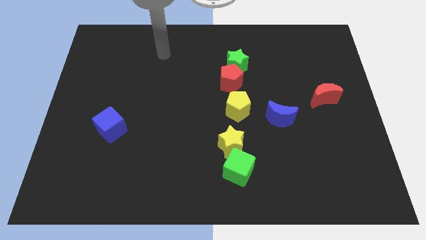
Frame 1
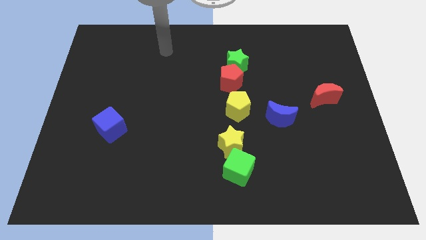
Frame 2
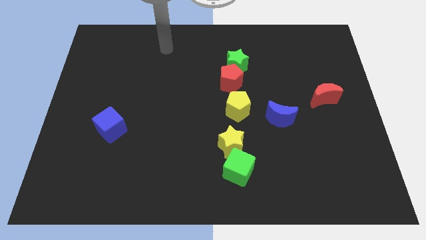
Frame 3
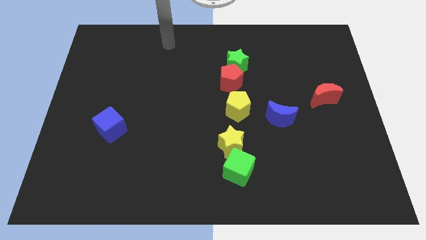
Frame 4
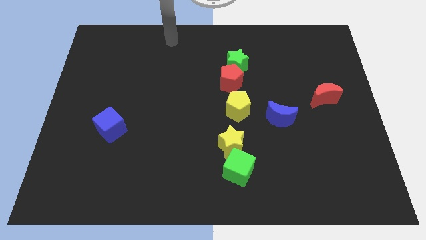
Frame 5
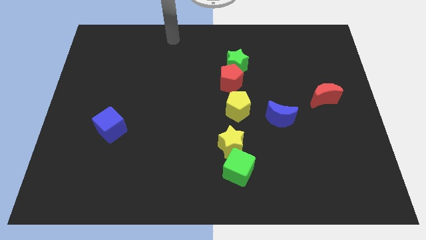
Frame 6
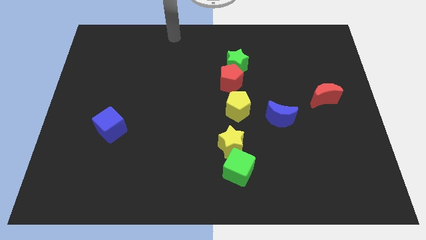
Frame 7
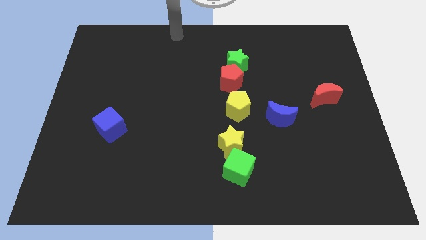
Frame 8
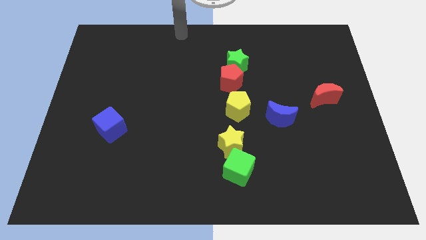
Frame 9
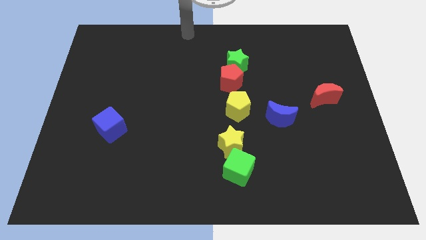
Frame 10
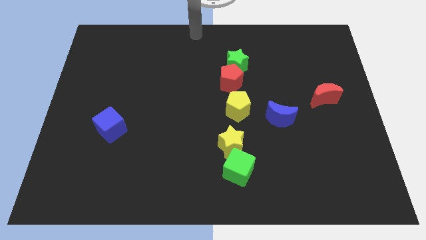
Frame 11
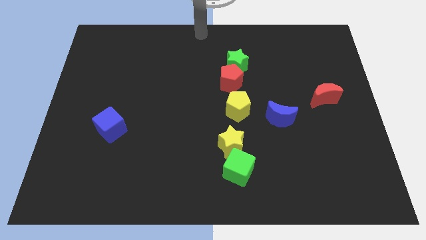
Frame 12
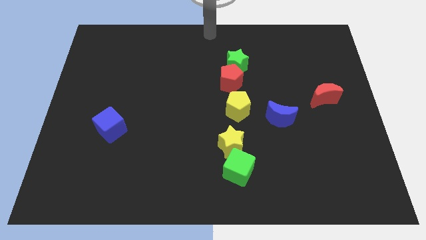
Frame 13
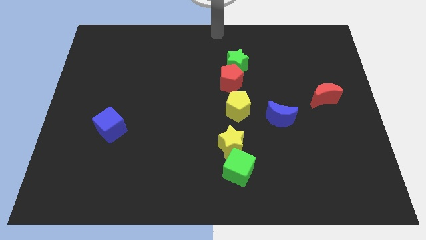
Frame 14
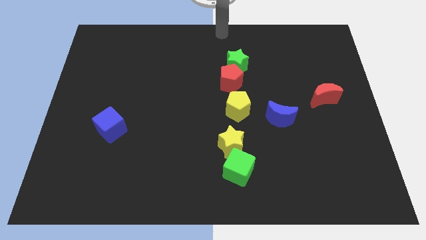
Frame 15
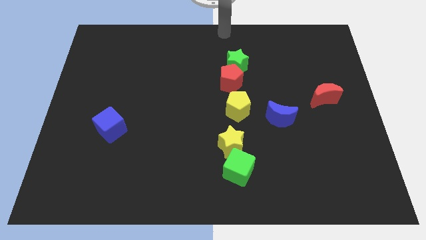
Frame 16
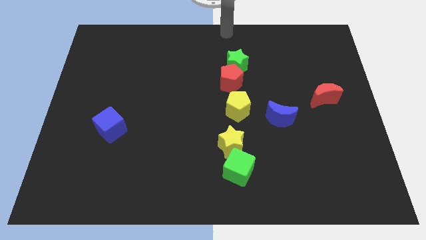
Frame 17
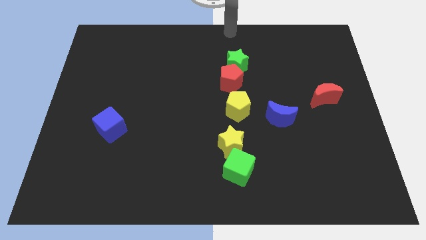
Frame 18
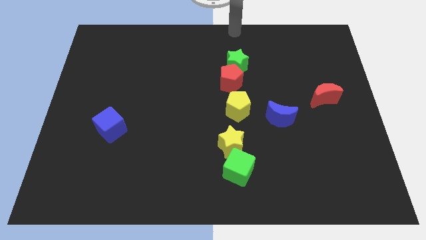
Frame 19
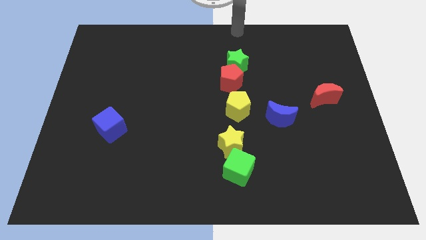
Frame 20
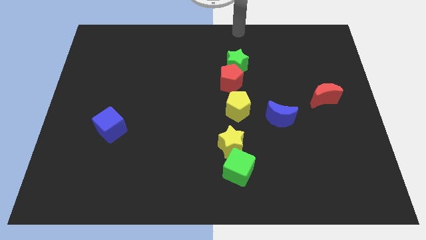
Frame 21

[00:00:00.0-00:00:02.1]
point your hand above the green star

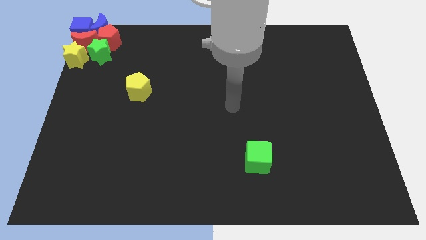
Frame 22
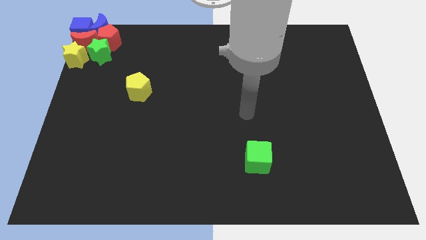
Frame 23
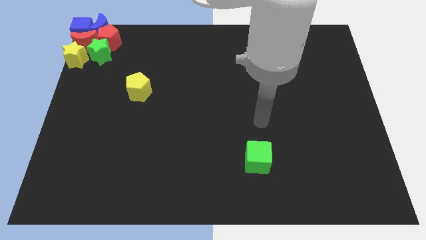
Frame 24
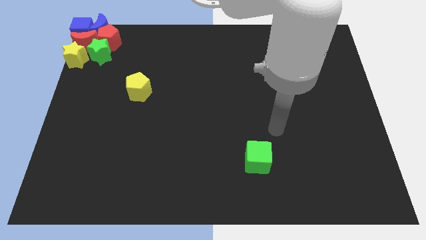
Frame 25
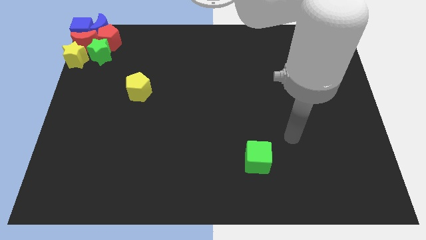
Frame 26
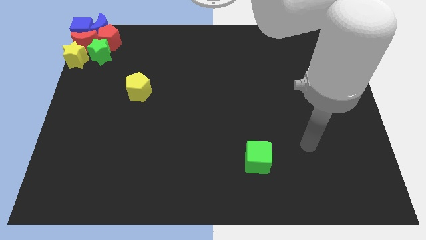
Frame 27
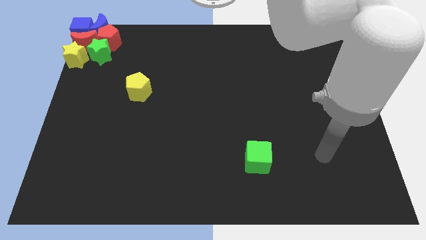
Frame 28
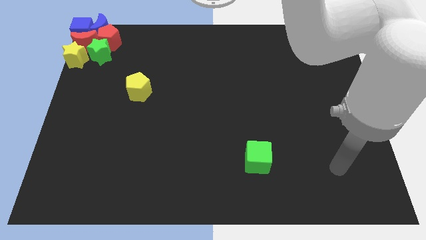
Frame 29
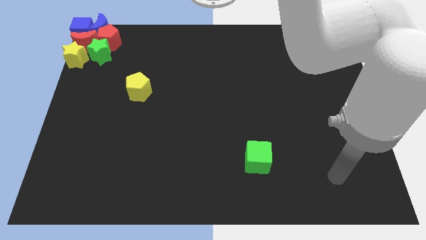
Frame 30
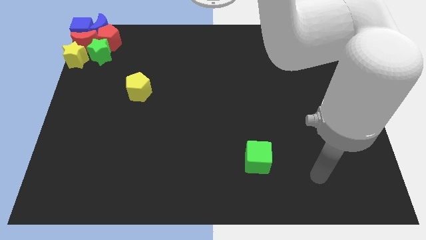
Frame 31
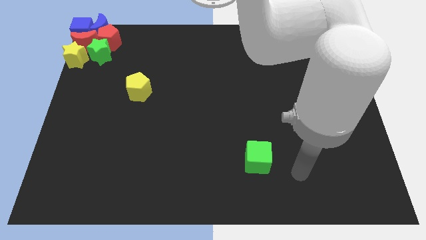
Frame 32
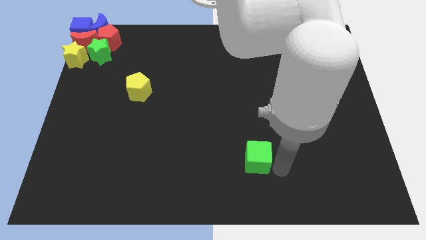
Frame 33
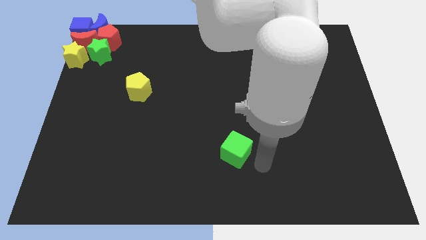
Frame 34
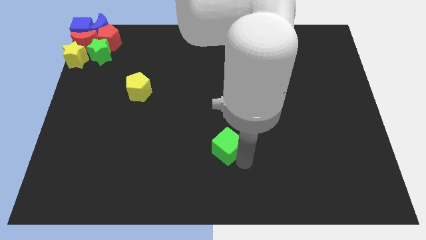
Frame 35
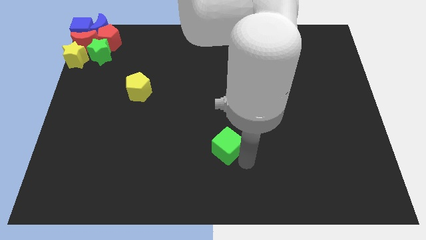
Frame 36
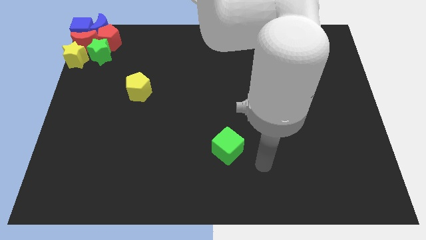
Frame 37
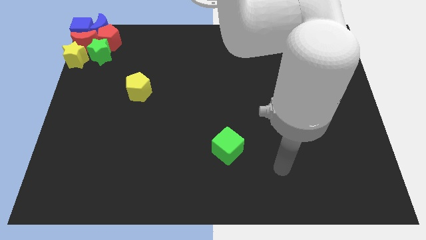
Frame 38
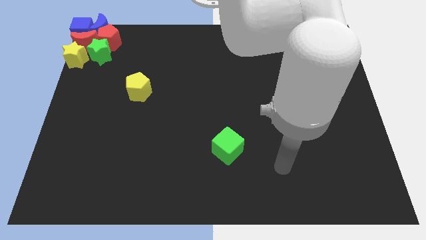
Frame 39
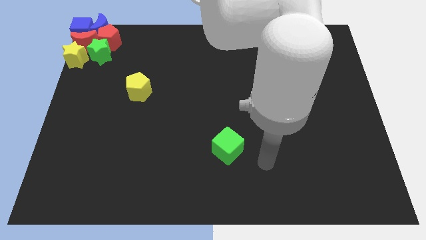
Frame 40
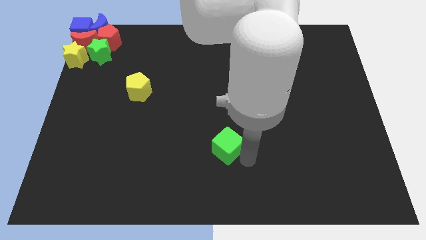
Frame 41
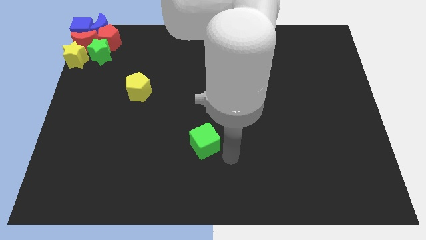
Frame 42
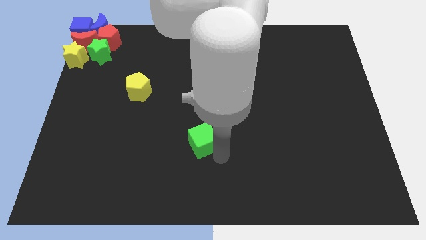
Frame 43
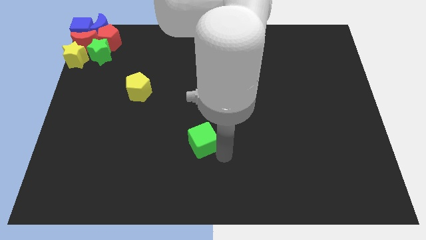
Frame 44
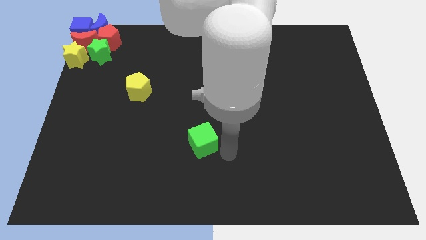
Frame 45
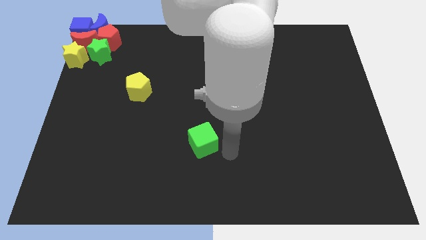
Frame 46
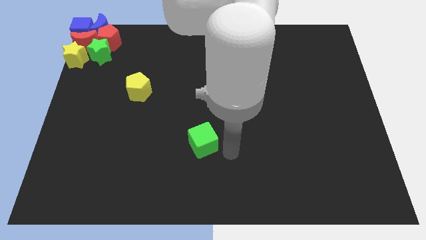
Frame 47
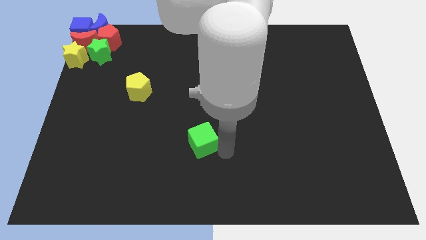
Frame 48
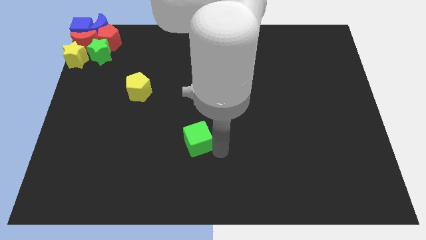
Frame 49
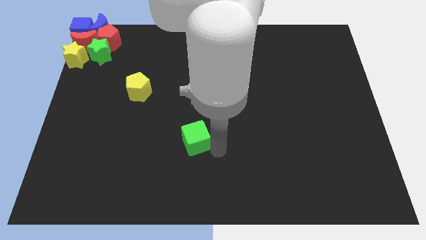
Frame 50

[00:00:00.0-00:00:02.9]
push the green cube towards the yellow pentagon

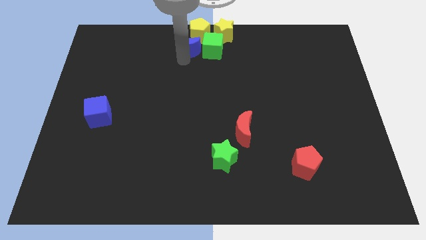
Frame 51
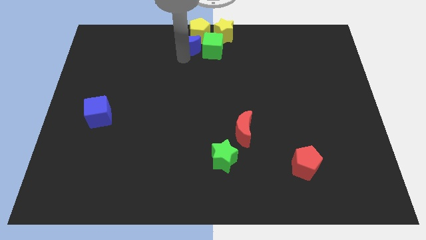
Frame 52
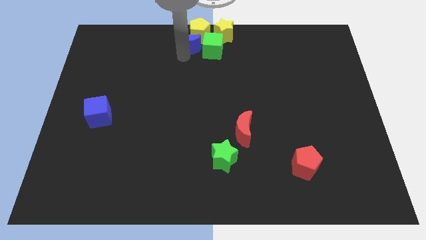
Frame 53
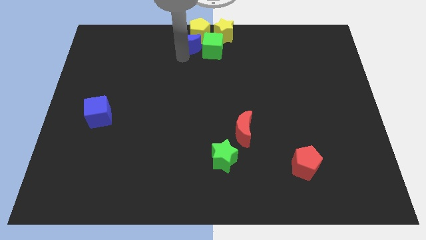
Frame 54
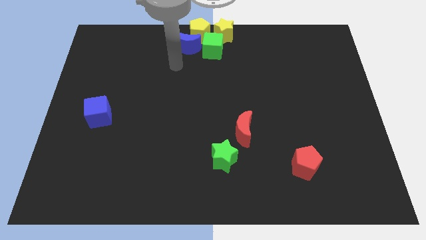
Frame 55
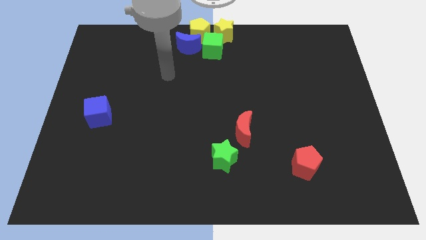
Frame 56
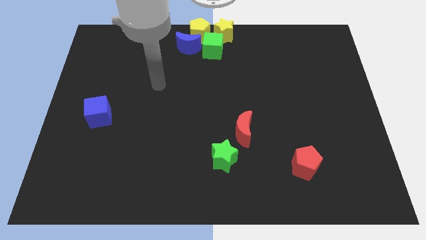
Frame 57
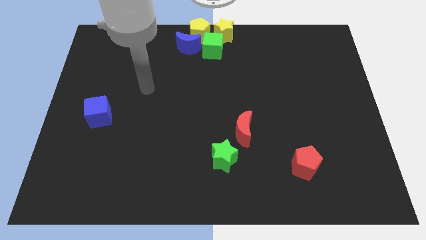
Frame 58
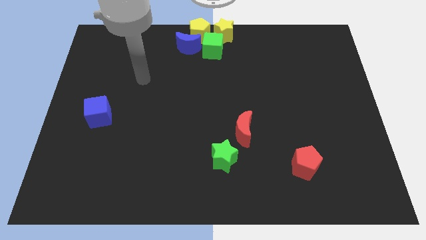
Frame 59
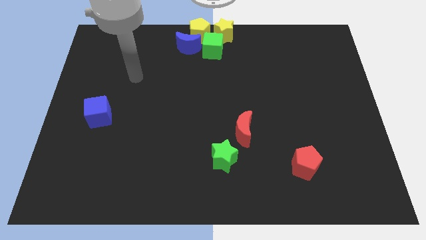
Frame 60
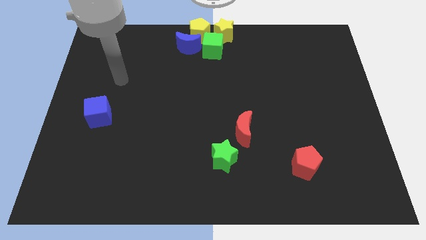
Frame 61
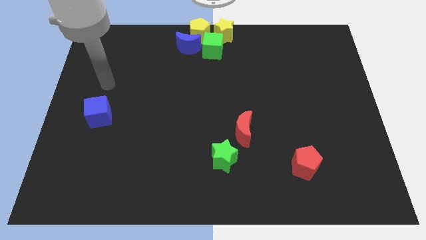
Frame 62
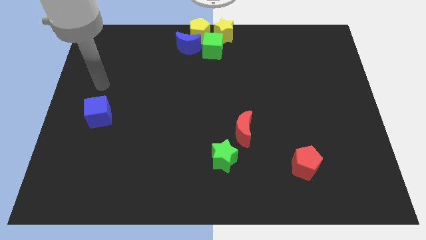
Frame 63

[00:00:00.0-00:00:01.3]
move the arm above the blue cube

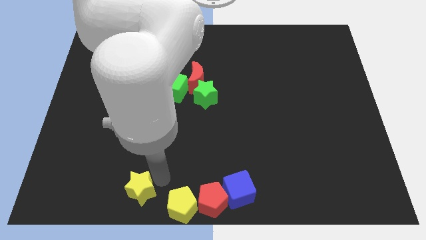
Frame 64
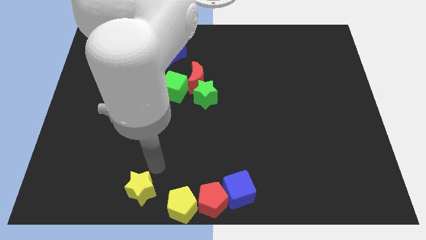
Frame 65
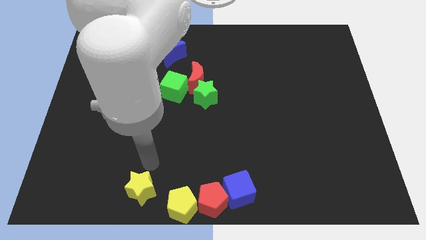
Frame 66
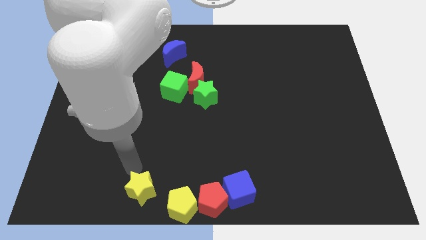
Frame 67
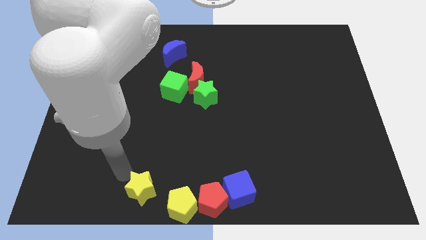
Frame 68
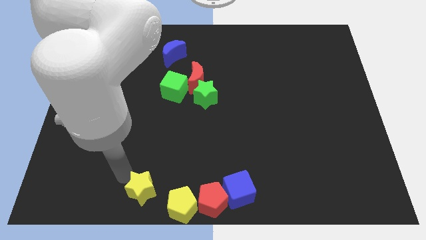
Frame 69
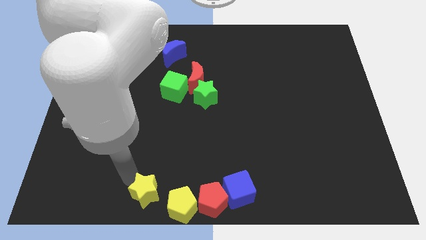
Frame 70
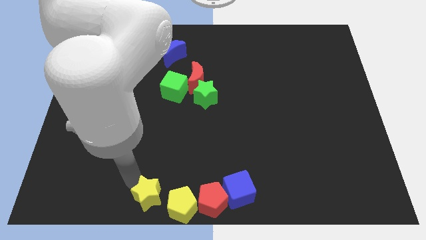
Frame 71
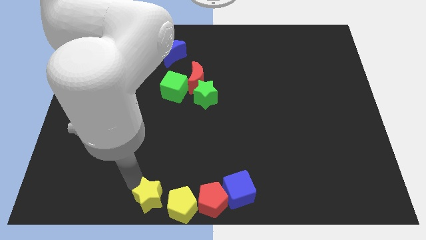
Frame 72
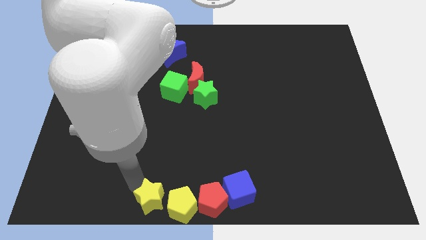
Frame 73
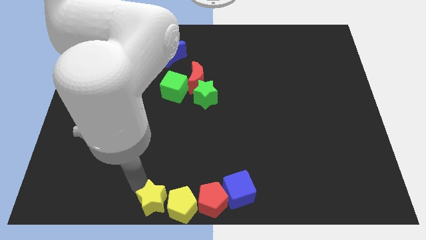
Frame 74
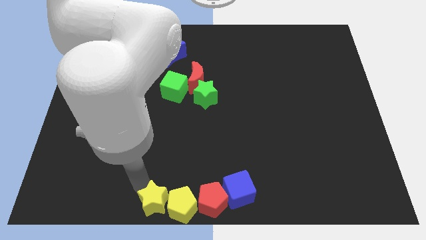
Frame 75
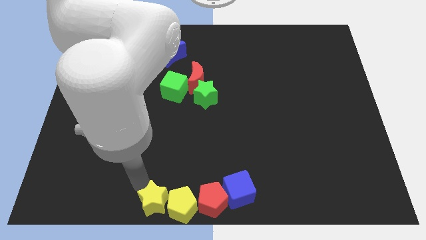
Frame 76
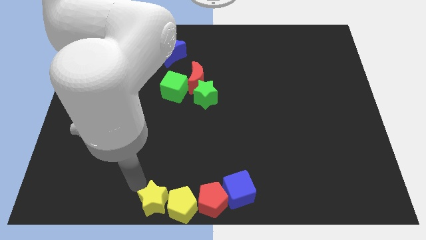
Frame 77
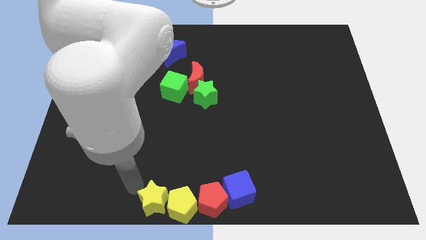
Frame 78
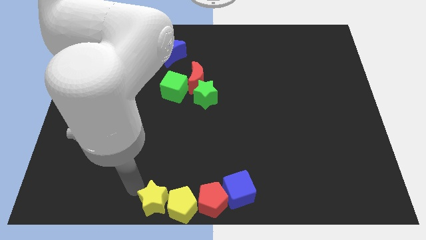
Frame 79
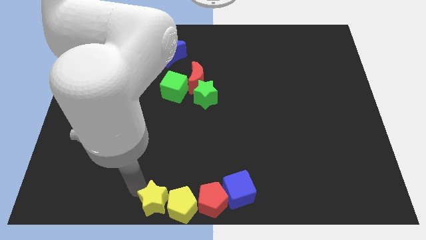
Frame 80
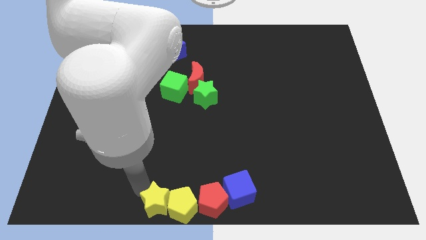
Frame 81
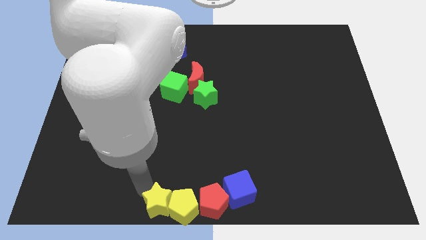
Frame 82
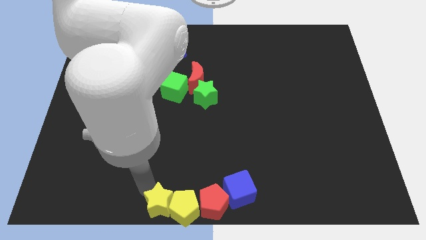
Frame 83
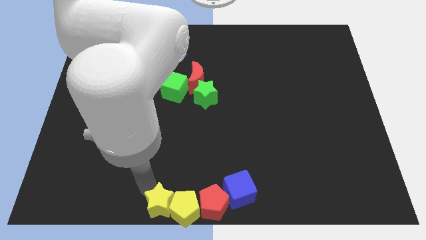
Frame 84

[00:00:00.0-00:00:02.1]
move the yellow star left to the yellow pentagon

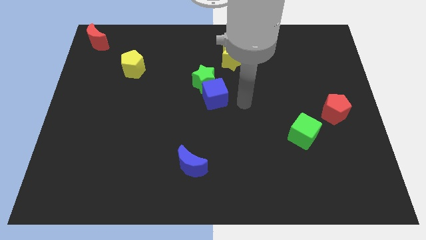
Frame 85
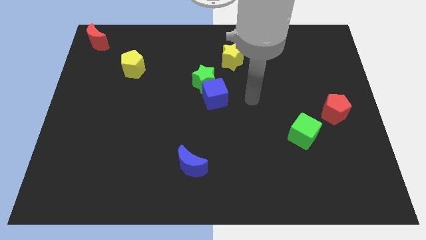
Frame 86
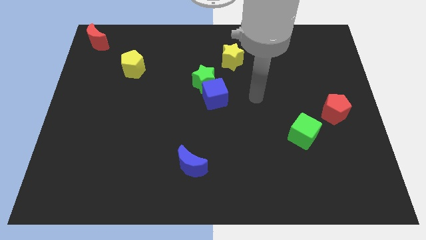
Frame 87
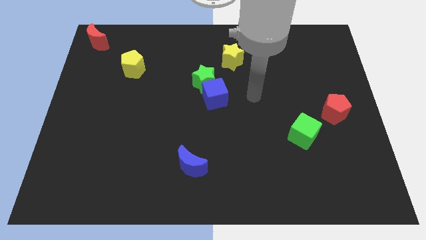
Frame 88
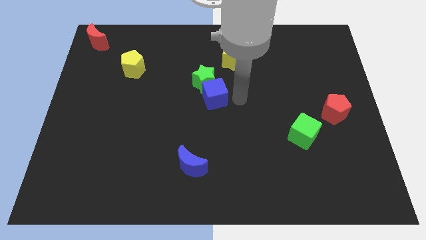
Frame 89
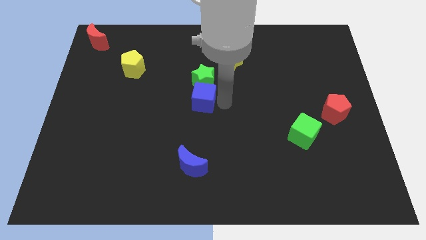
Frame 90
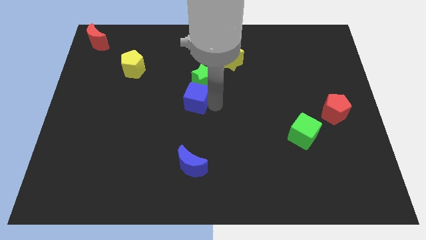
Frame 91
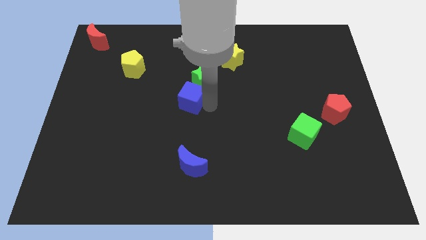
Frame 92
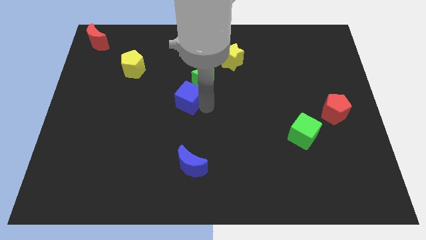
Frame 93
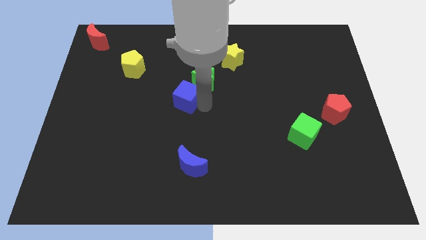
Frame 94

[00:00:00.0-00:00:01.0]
move the blue cube left below the green star
